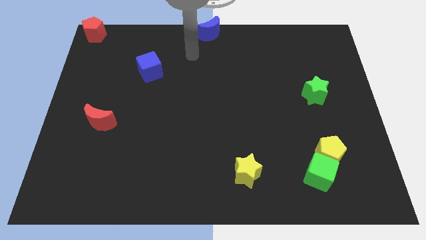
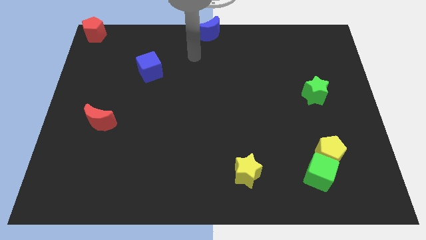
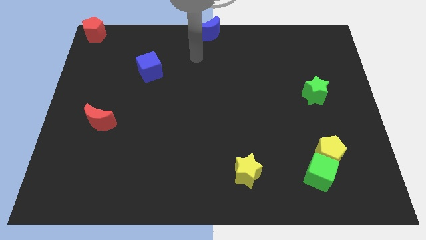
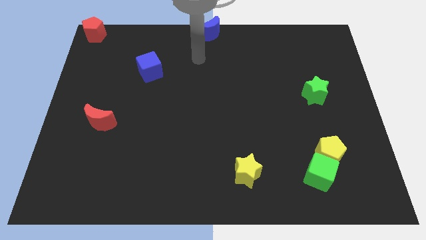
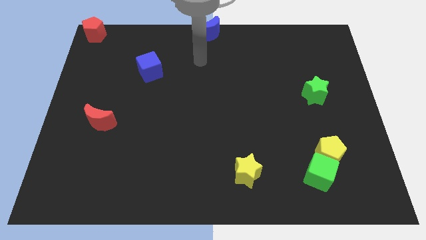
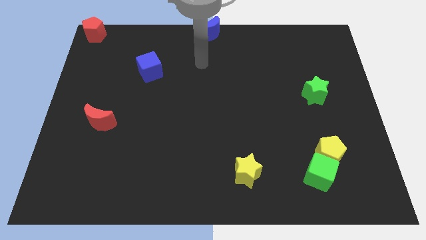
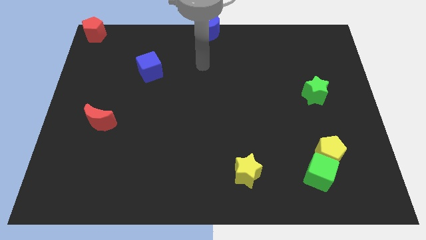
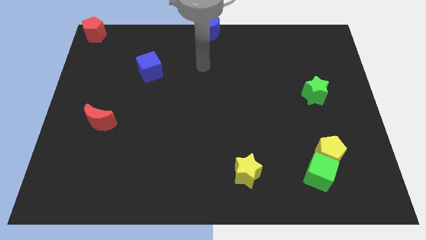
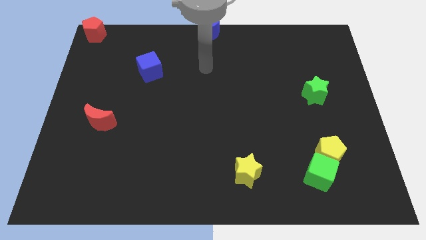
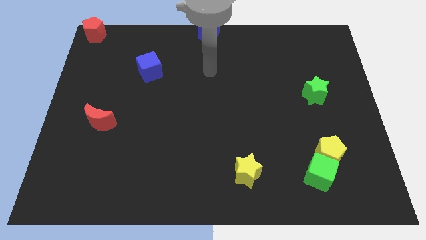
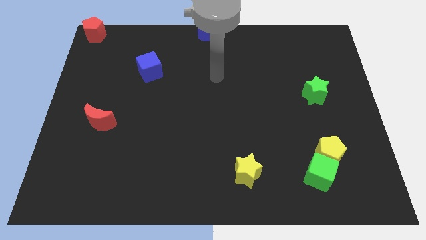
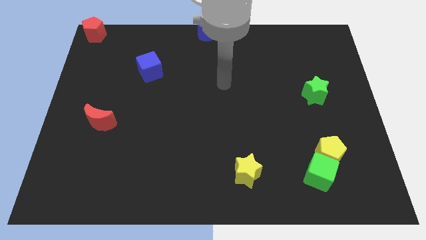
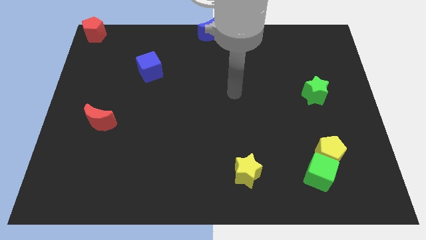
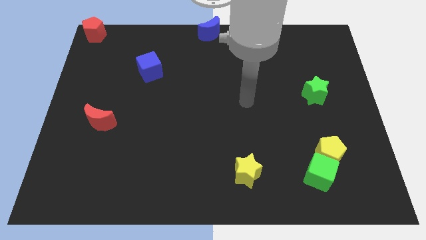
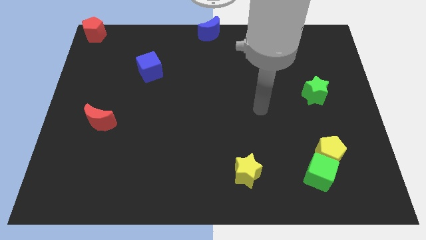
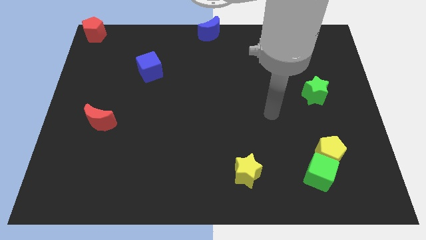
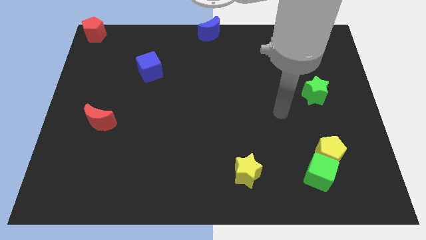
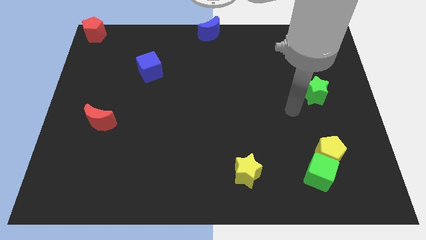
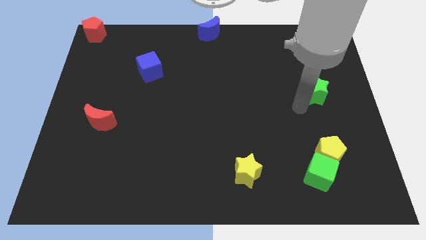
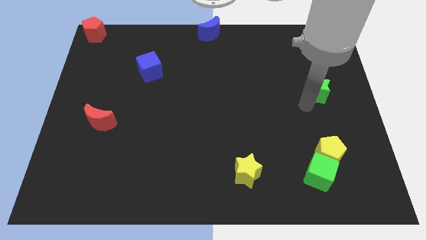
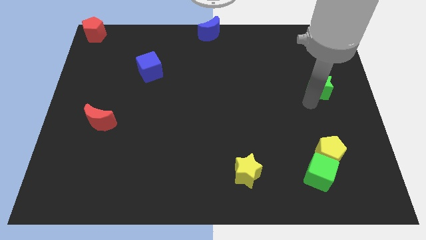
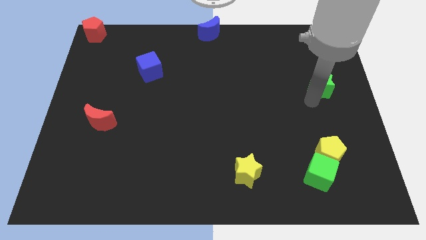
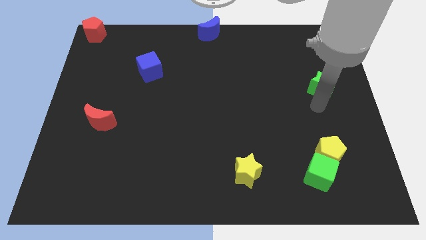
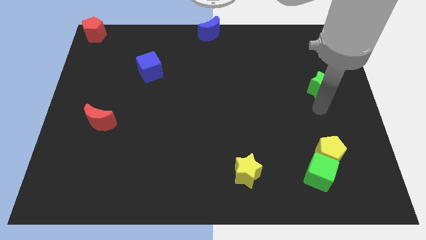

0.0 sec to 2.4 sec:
touch the bottom left of the green star

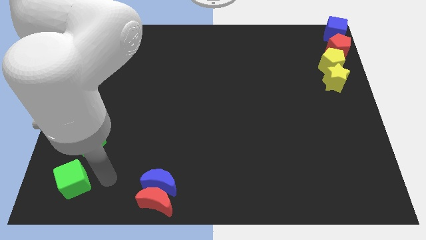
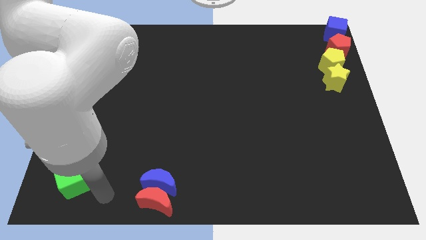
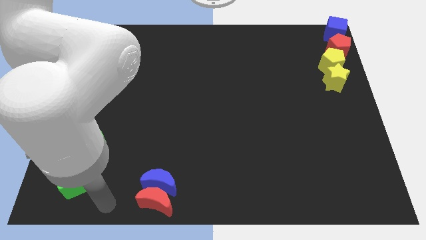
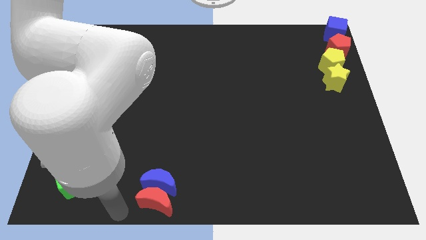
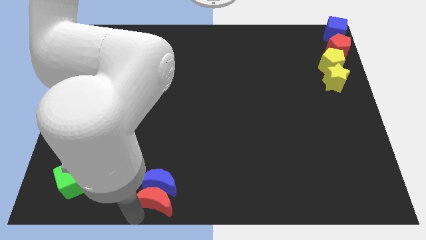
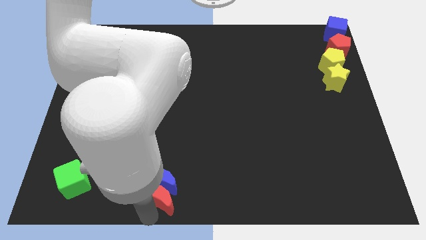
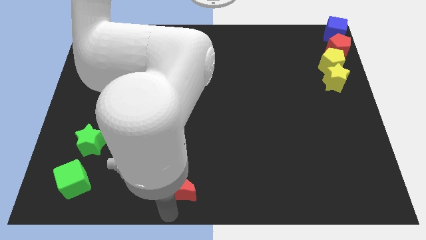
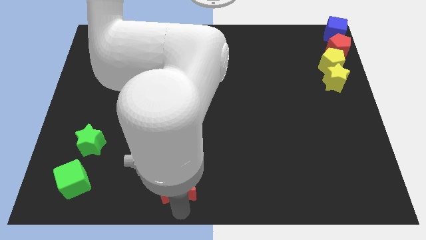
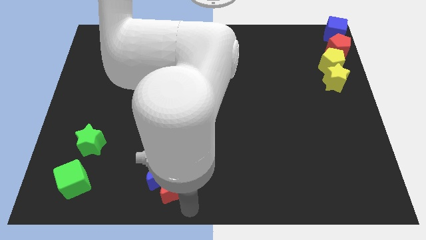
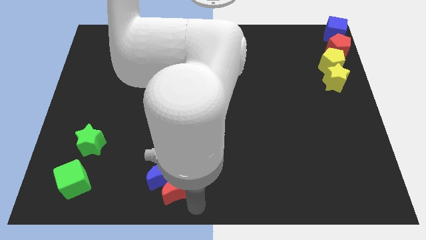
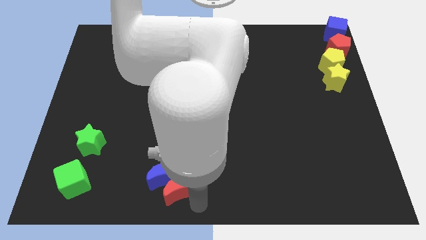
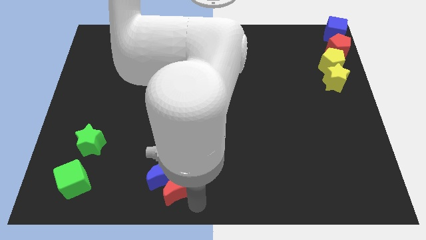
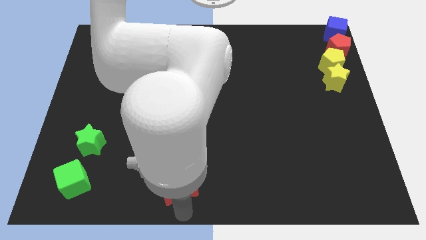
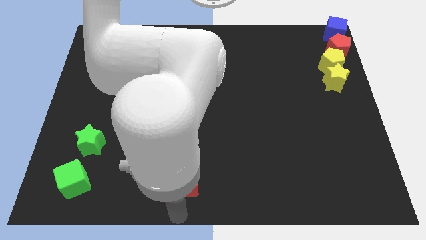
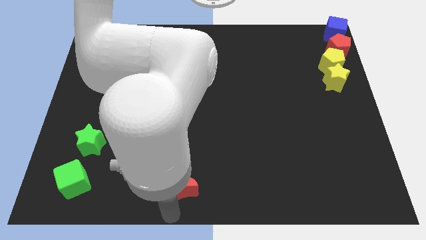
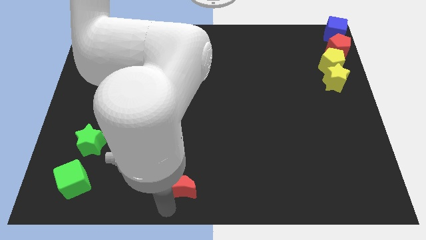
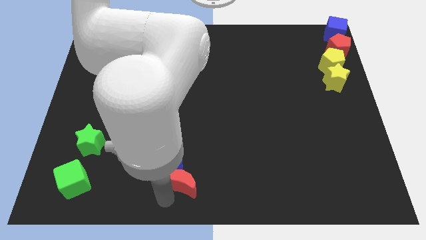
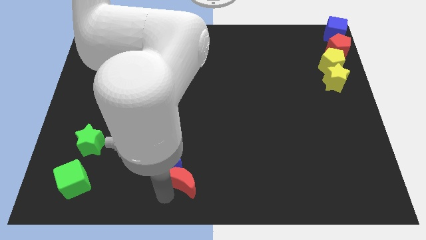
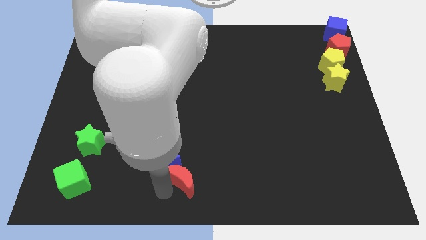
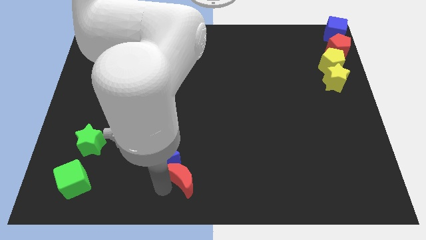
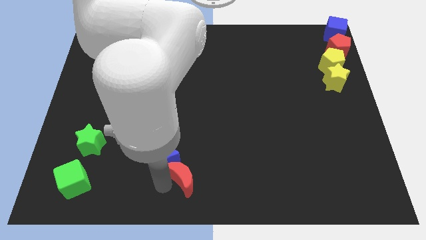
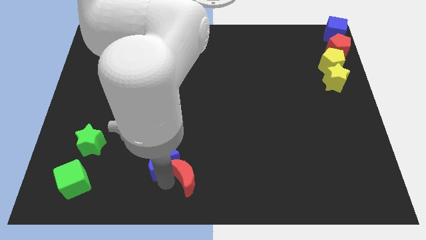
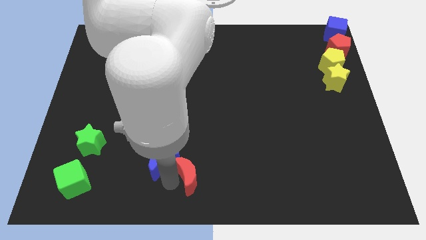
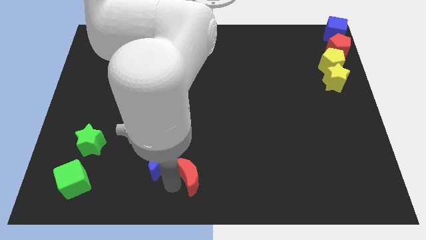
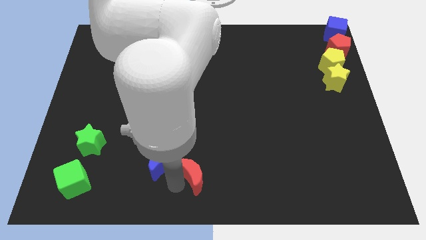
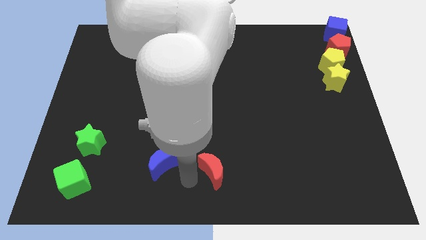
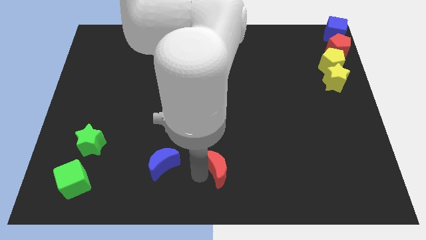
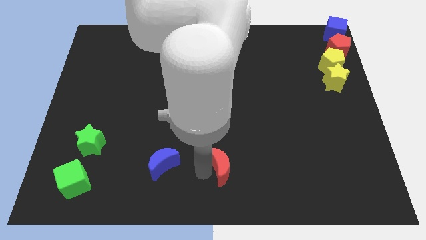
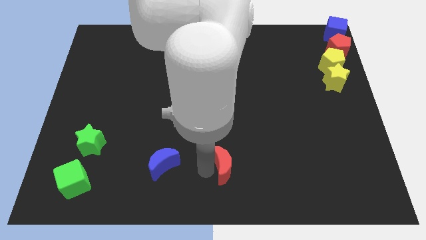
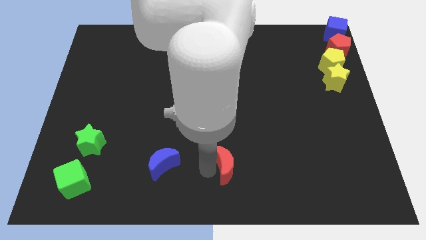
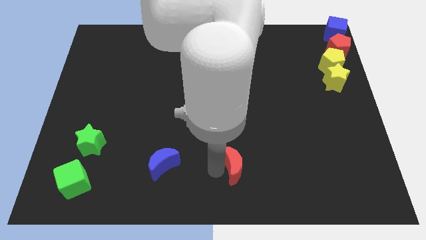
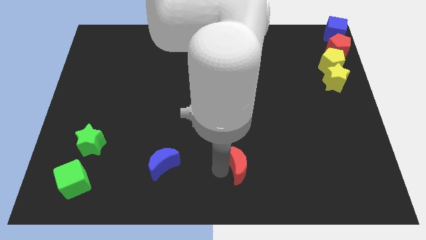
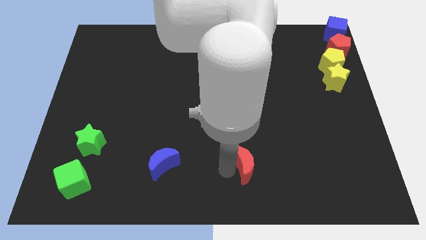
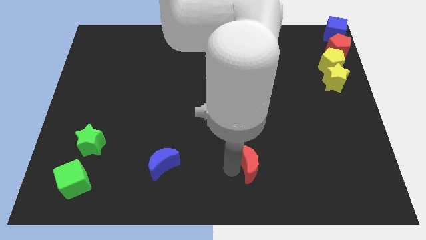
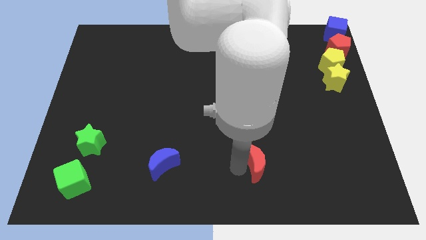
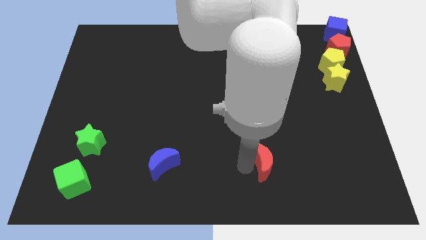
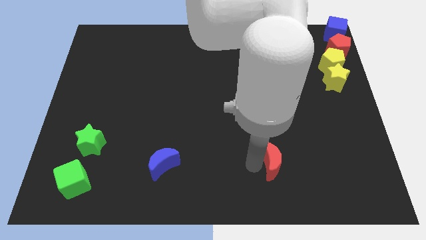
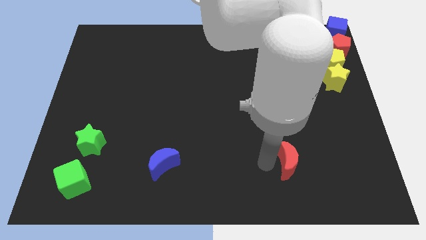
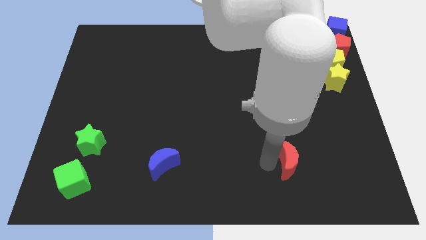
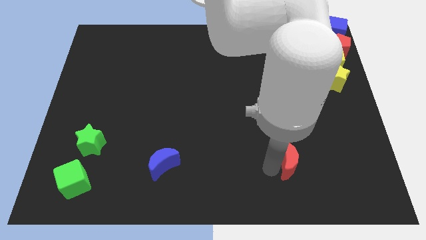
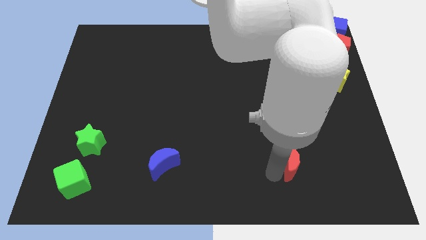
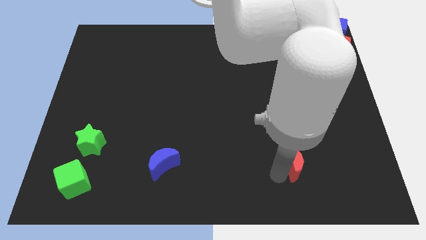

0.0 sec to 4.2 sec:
separate red crescent from blue crescent

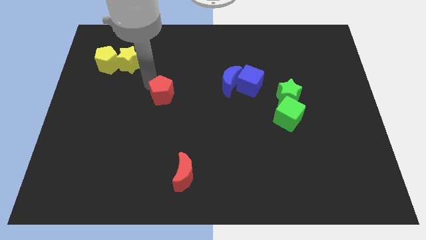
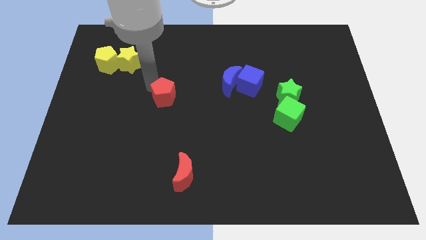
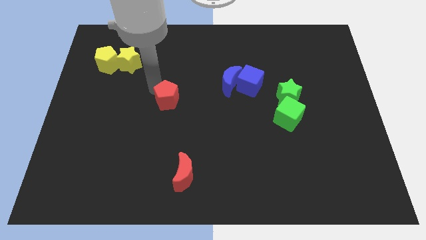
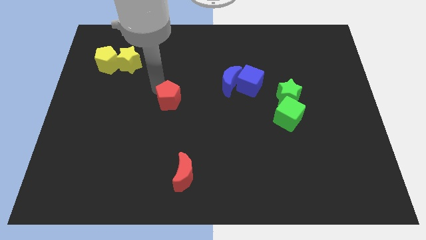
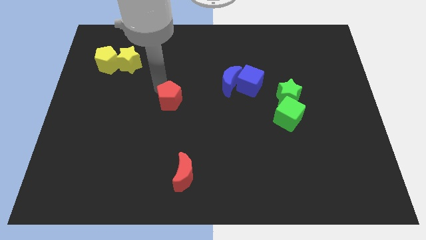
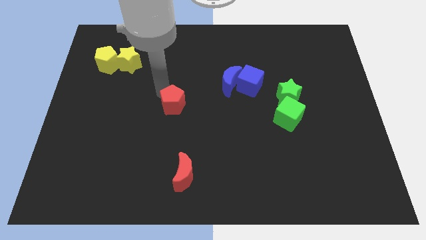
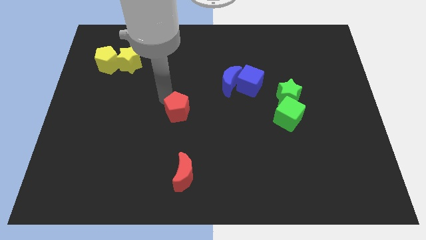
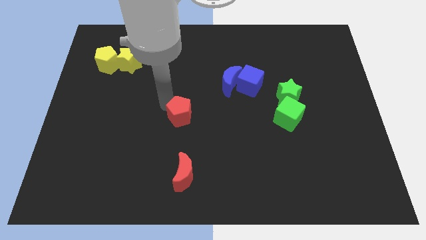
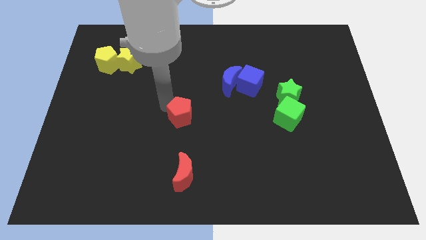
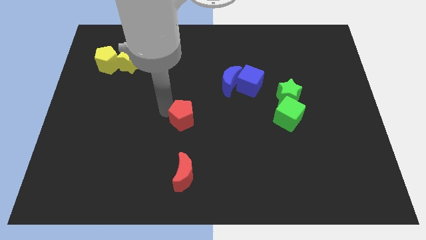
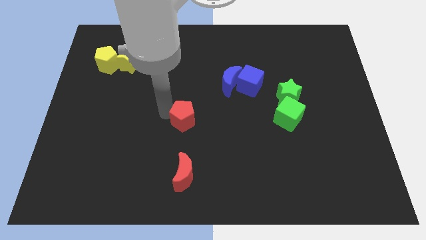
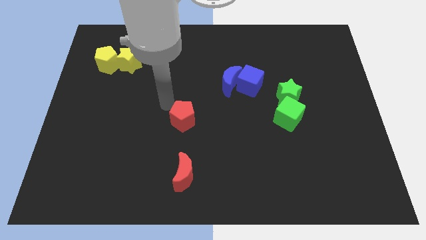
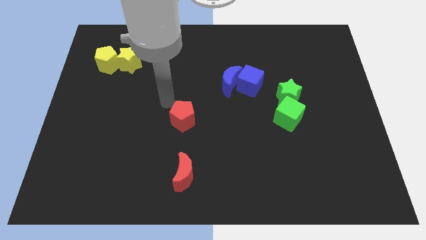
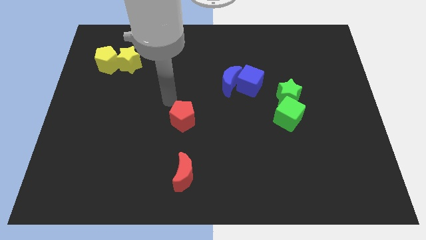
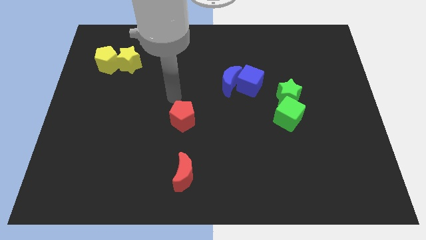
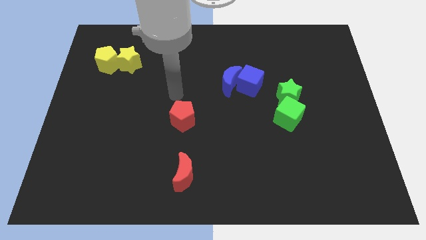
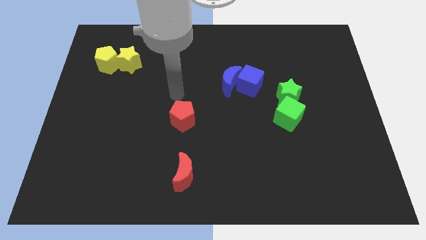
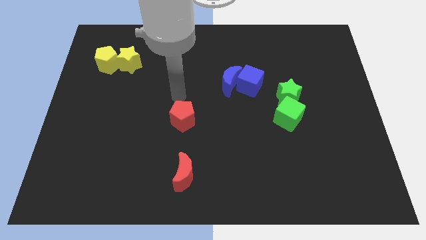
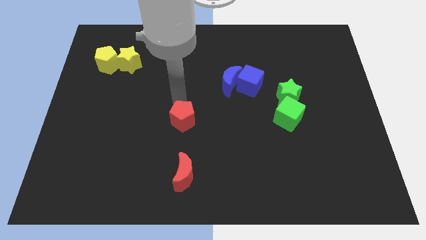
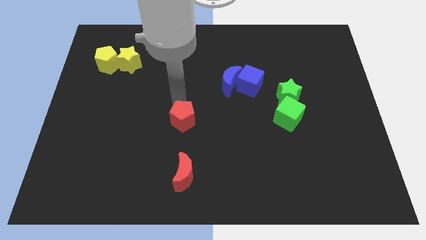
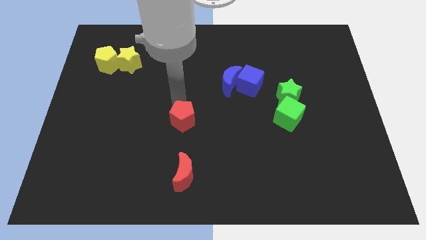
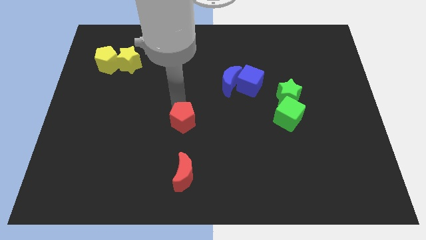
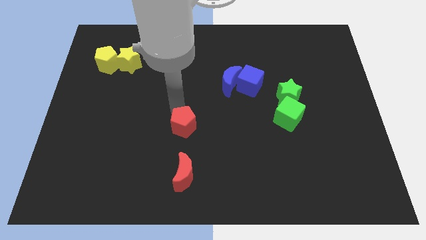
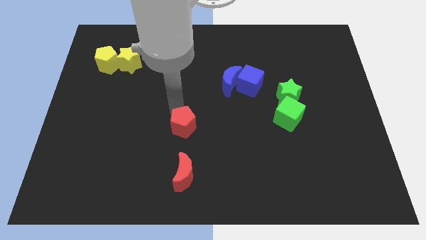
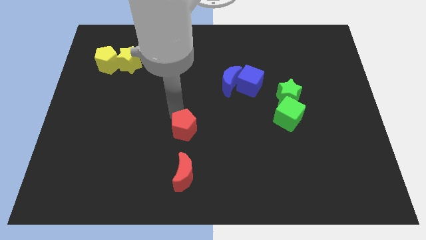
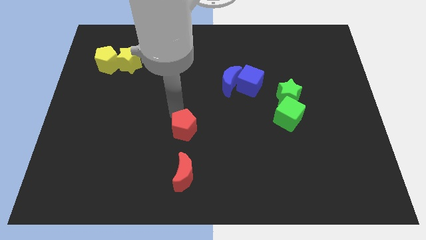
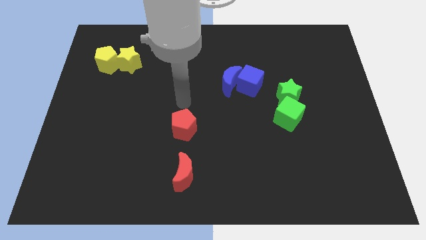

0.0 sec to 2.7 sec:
move the red pentagon to the top of the red crescent
